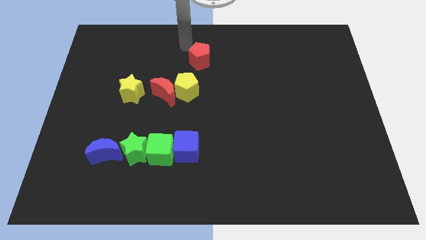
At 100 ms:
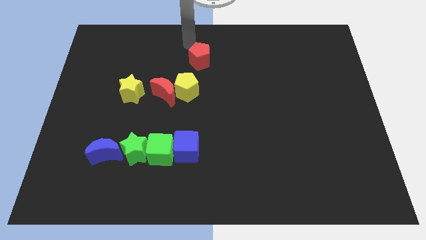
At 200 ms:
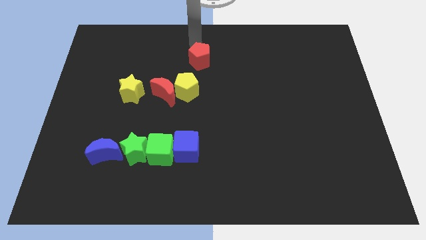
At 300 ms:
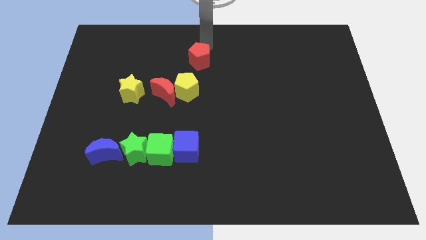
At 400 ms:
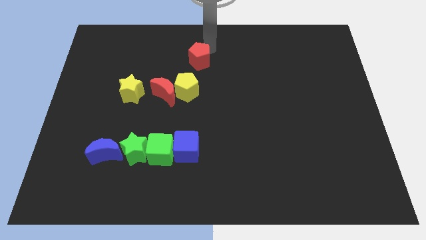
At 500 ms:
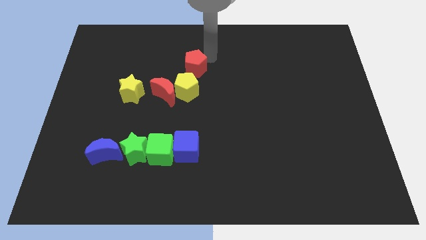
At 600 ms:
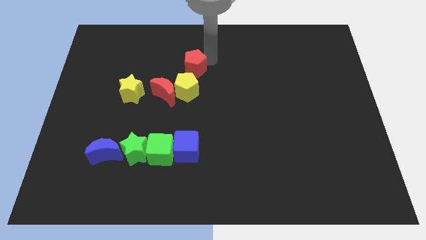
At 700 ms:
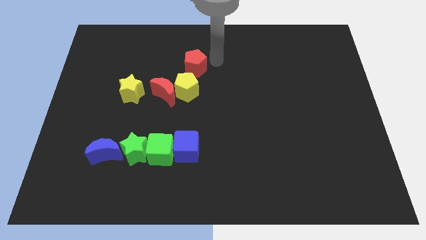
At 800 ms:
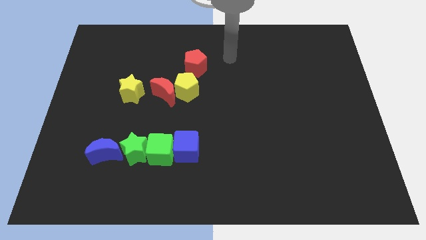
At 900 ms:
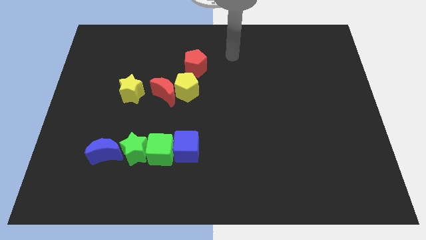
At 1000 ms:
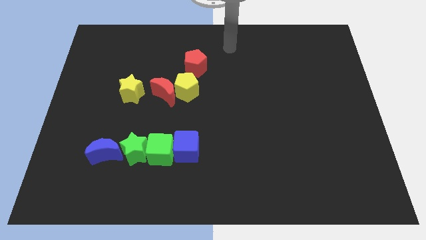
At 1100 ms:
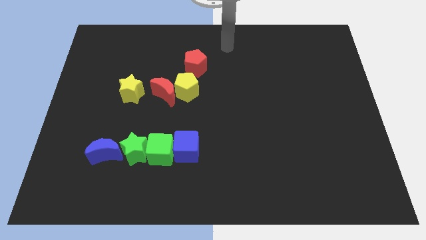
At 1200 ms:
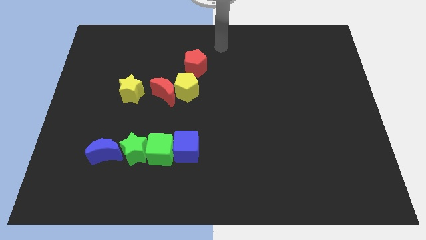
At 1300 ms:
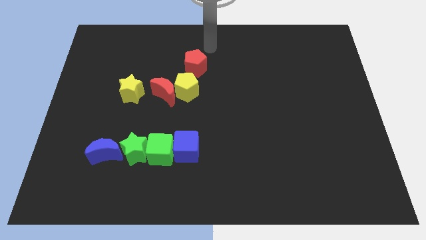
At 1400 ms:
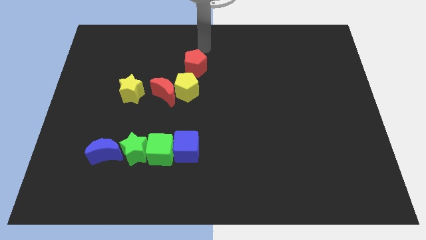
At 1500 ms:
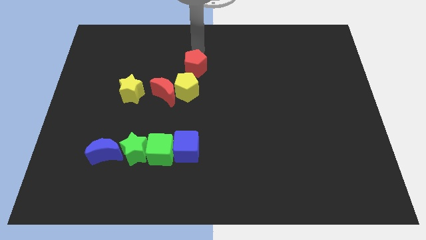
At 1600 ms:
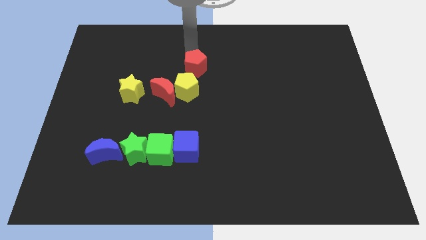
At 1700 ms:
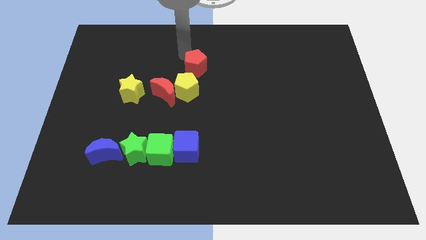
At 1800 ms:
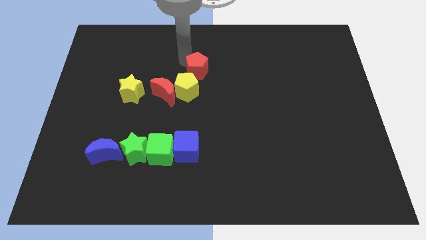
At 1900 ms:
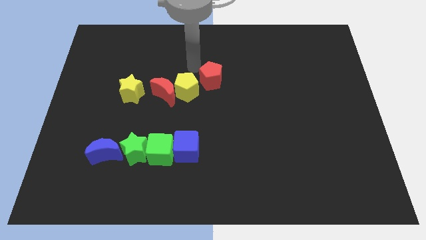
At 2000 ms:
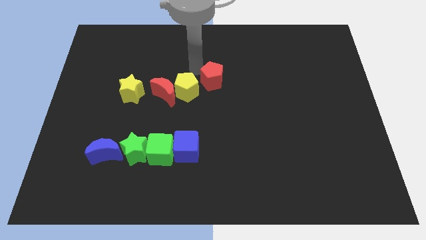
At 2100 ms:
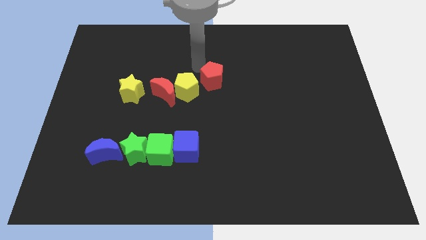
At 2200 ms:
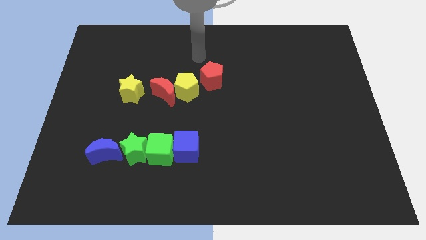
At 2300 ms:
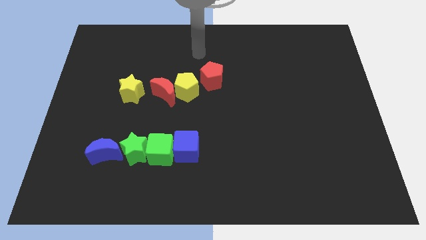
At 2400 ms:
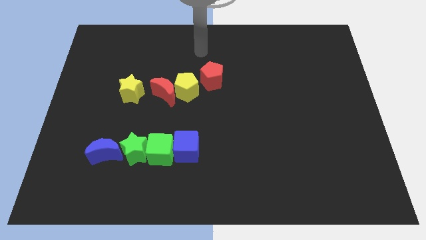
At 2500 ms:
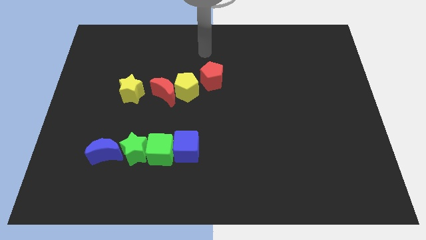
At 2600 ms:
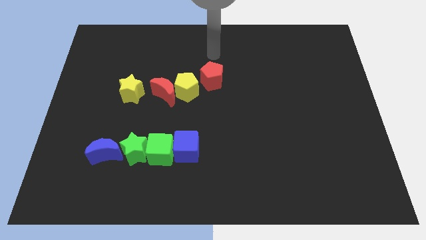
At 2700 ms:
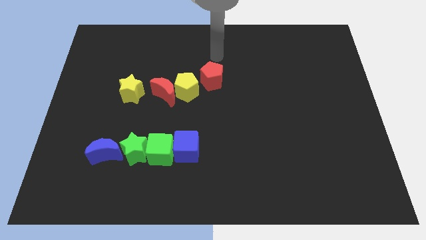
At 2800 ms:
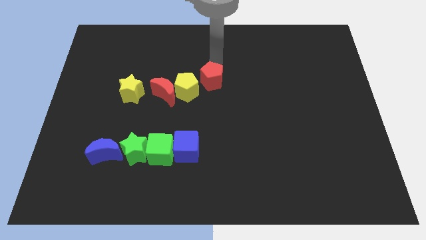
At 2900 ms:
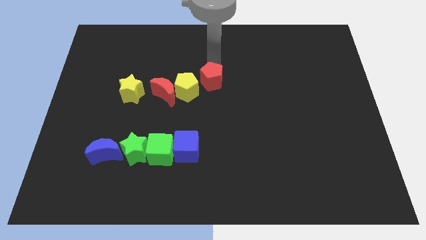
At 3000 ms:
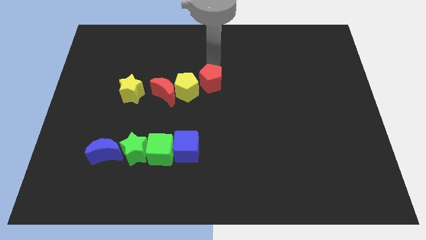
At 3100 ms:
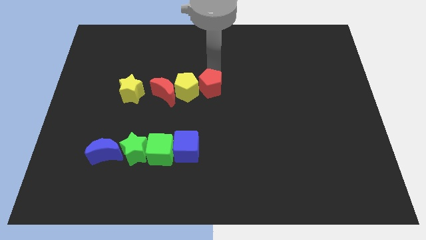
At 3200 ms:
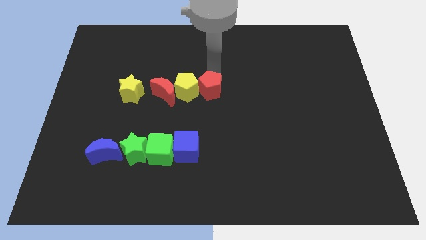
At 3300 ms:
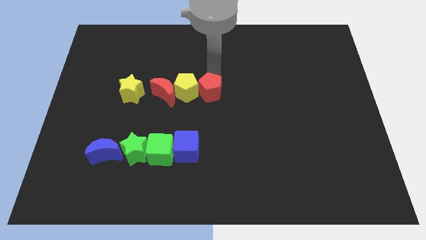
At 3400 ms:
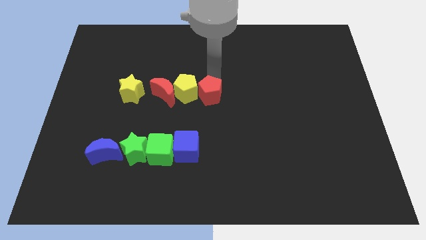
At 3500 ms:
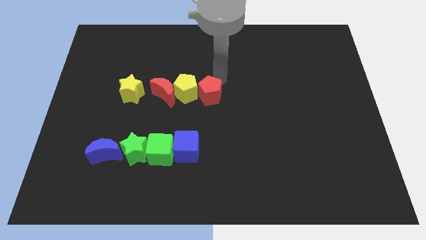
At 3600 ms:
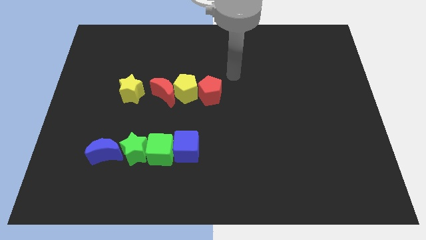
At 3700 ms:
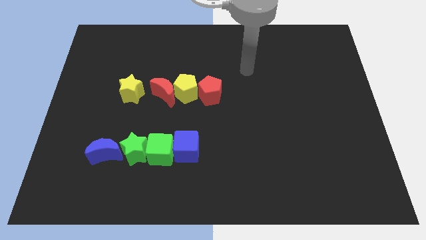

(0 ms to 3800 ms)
push the red pentagon into the yellow pentagon on the center of the board

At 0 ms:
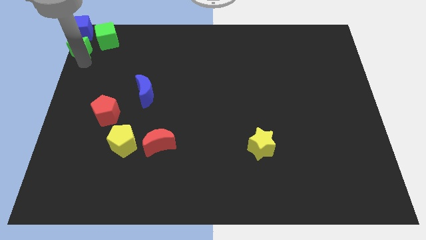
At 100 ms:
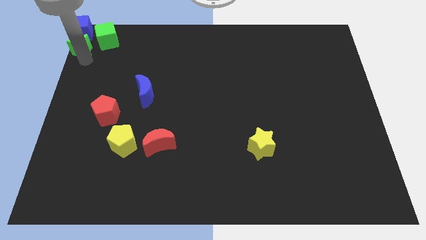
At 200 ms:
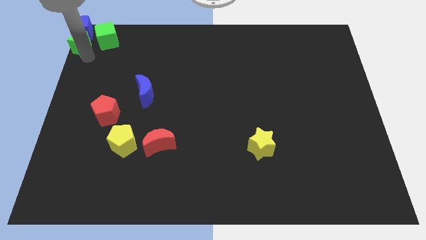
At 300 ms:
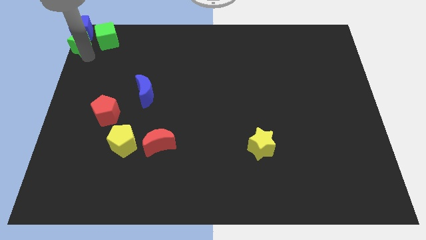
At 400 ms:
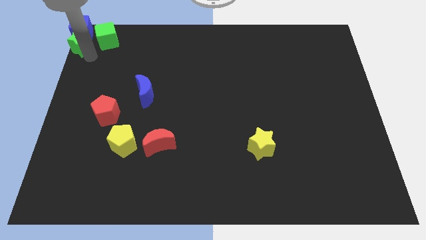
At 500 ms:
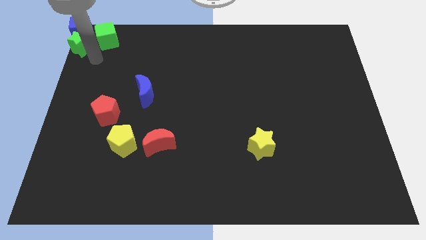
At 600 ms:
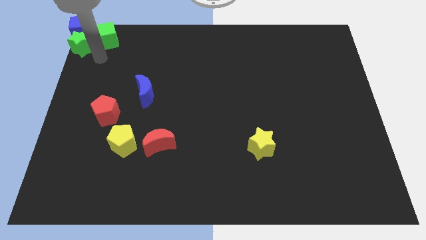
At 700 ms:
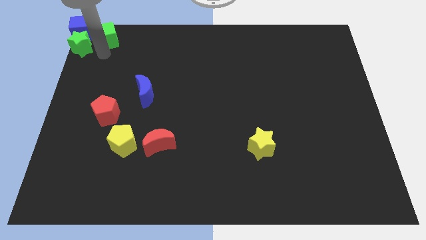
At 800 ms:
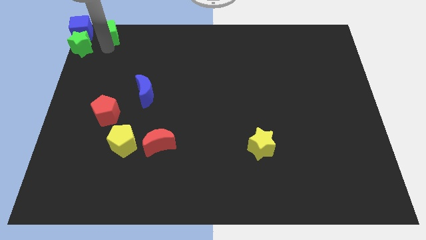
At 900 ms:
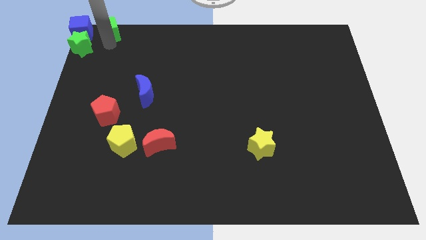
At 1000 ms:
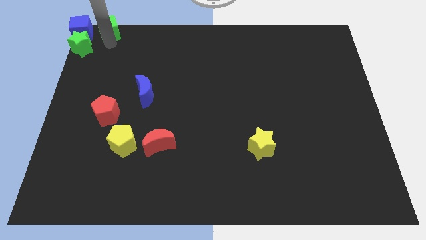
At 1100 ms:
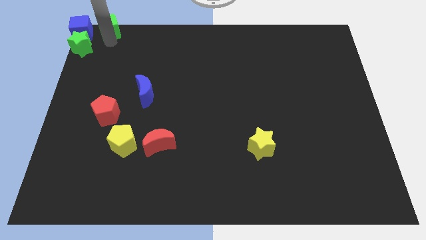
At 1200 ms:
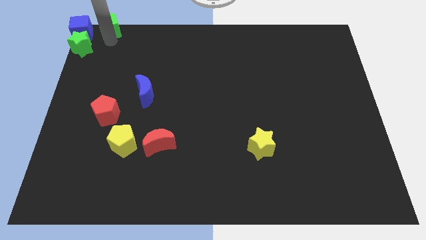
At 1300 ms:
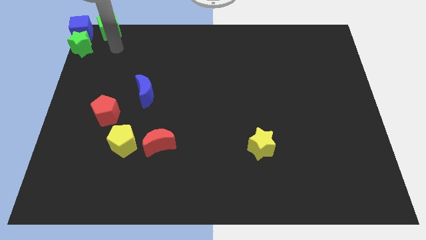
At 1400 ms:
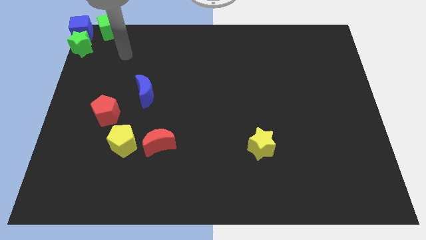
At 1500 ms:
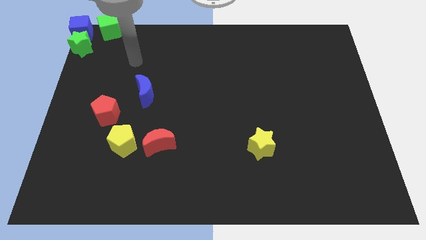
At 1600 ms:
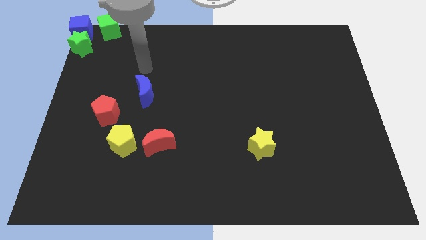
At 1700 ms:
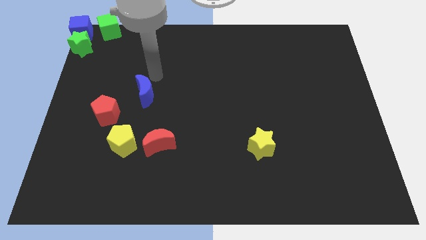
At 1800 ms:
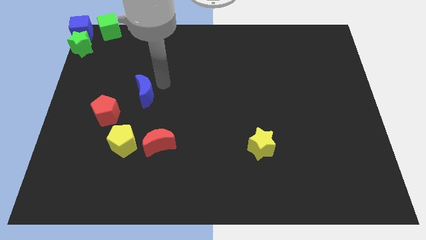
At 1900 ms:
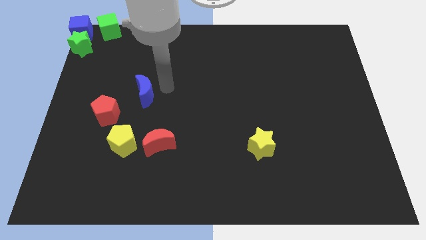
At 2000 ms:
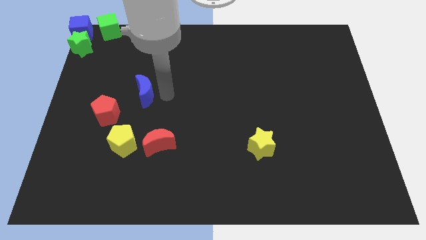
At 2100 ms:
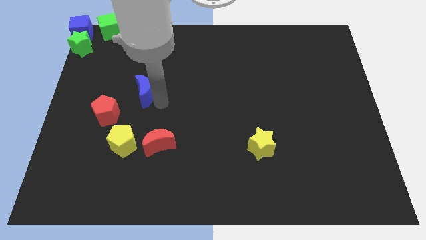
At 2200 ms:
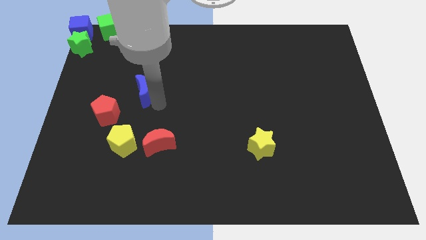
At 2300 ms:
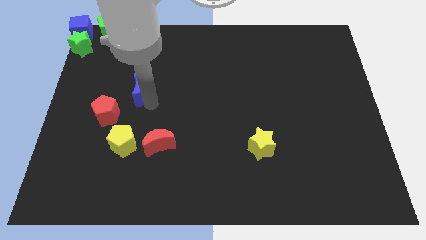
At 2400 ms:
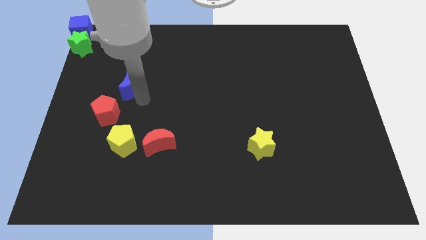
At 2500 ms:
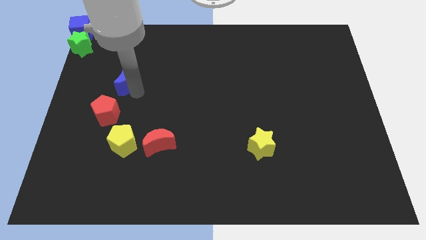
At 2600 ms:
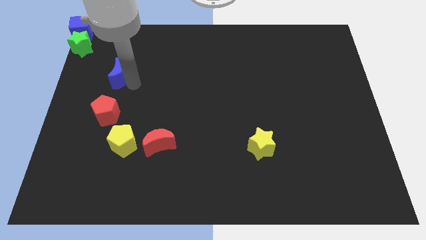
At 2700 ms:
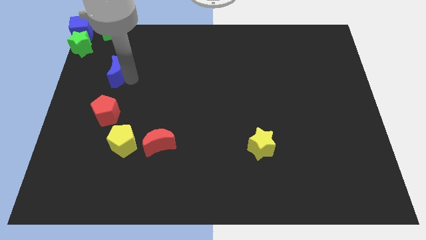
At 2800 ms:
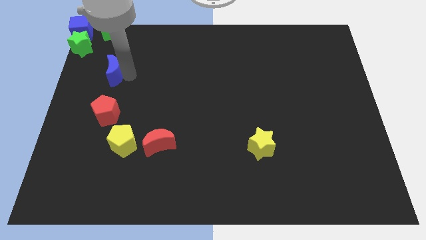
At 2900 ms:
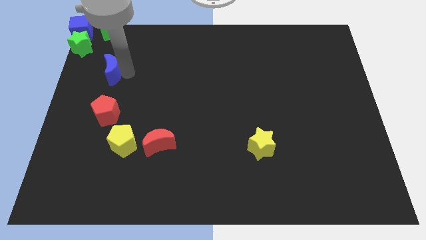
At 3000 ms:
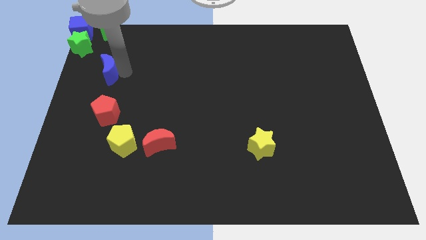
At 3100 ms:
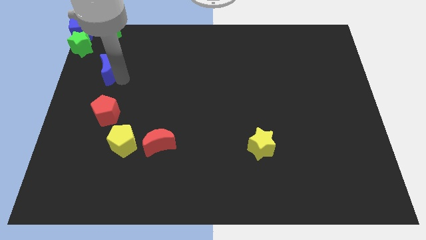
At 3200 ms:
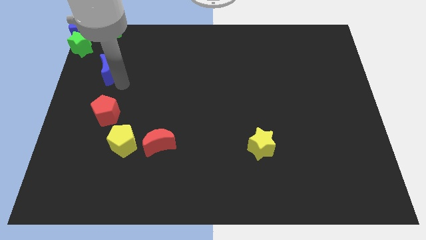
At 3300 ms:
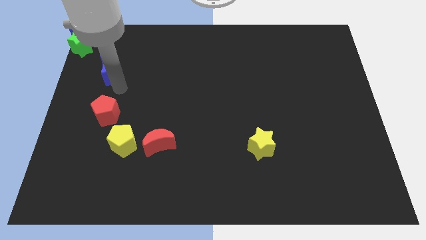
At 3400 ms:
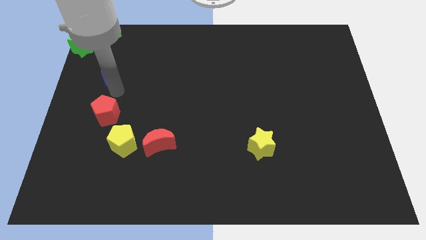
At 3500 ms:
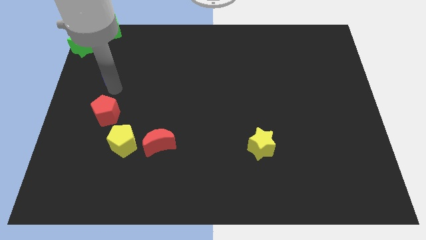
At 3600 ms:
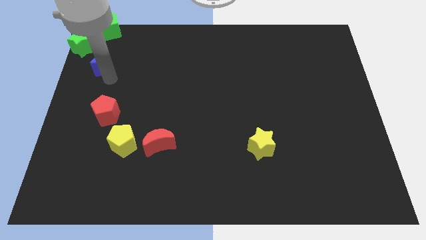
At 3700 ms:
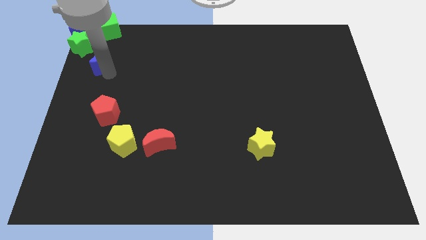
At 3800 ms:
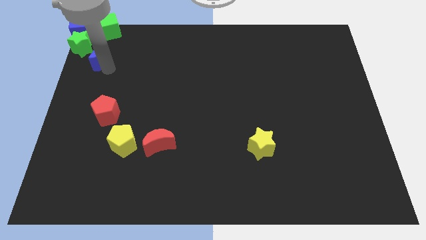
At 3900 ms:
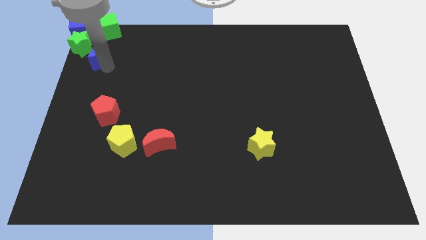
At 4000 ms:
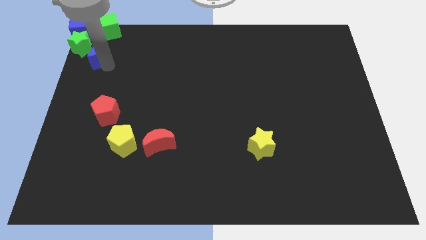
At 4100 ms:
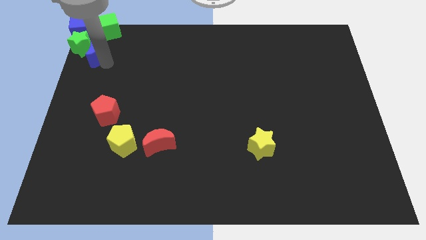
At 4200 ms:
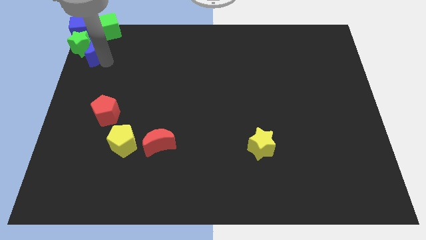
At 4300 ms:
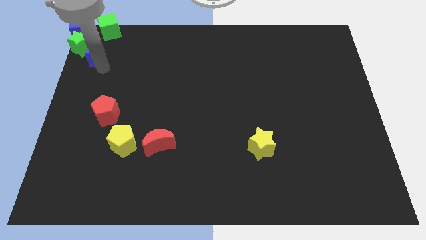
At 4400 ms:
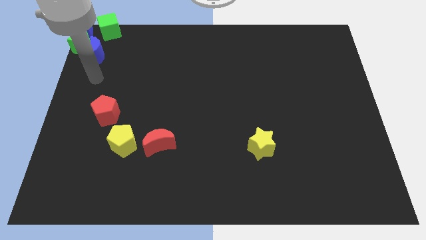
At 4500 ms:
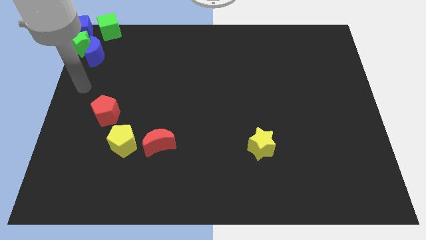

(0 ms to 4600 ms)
push the blue moon diagonally bottom right to green star

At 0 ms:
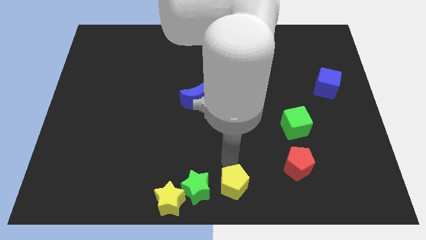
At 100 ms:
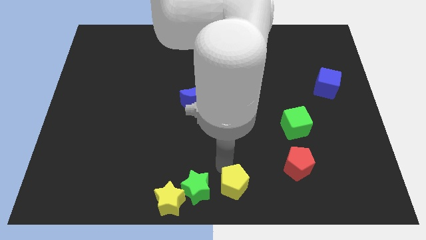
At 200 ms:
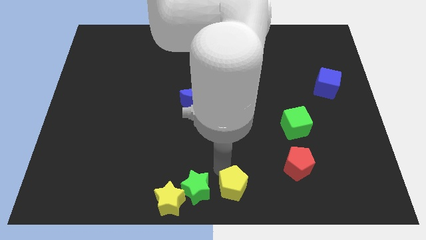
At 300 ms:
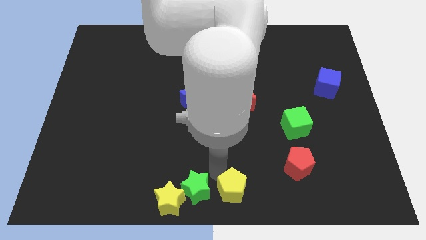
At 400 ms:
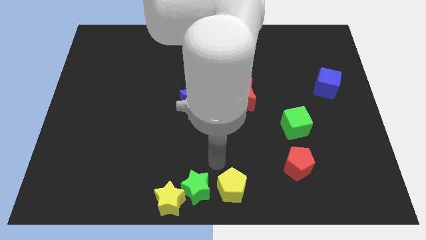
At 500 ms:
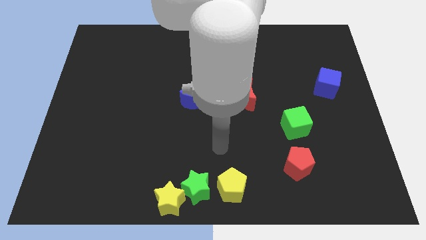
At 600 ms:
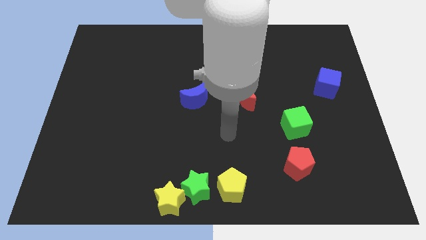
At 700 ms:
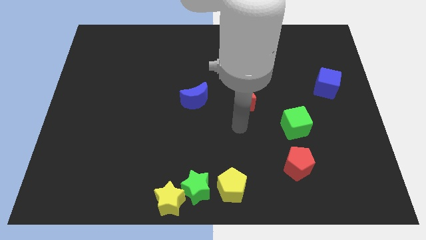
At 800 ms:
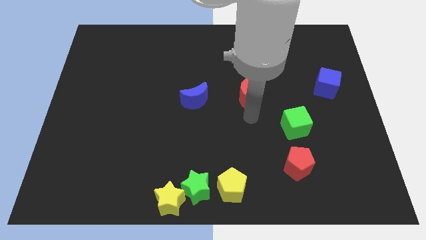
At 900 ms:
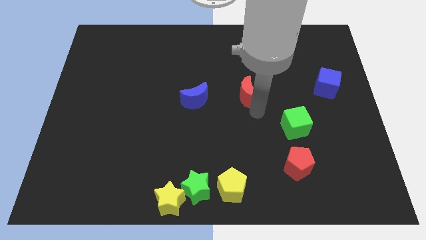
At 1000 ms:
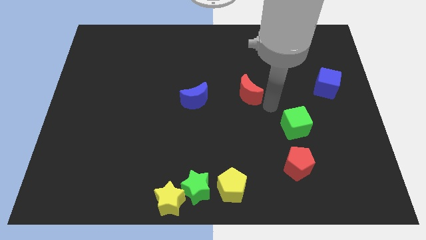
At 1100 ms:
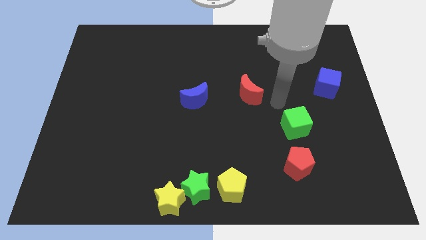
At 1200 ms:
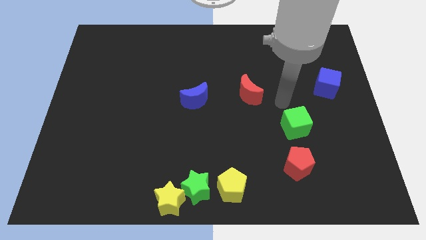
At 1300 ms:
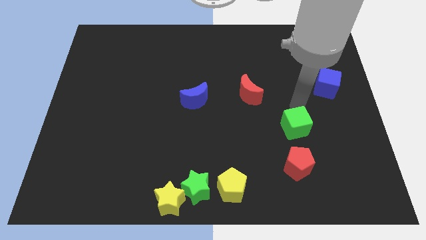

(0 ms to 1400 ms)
push the yellow pentagon towards the bottom center of the board
